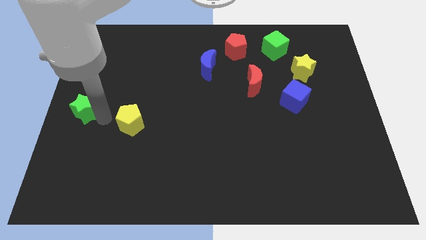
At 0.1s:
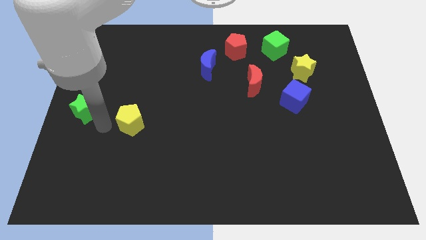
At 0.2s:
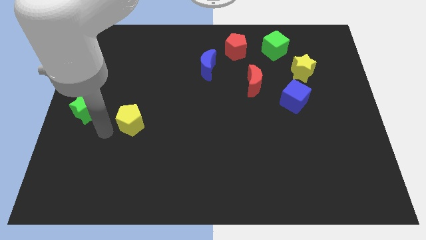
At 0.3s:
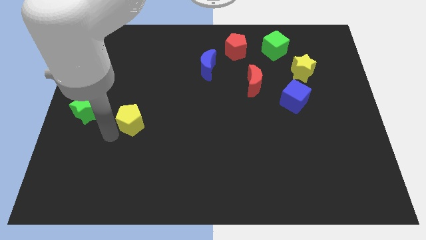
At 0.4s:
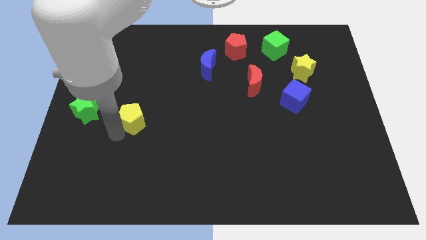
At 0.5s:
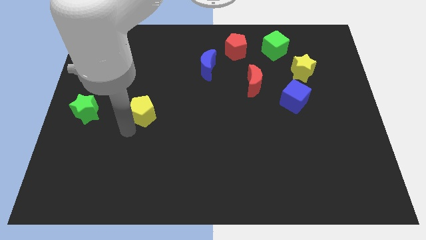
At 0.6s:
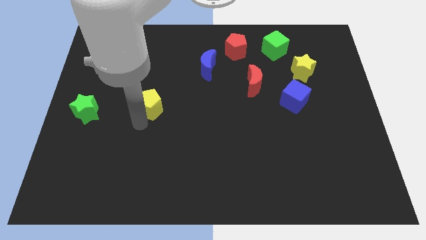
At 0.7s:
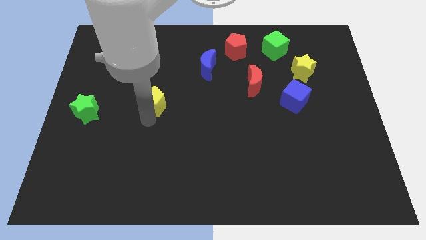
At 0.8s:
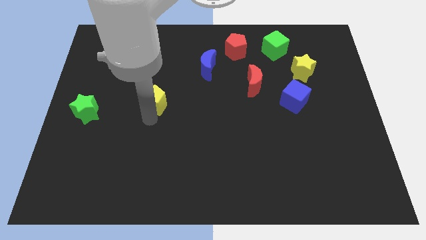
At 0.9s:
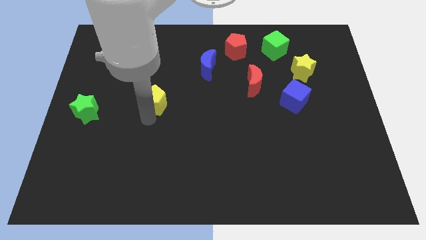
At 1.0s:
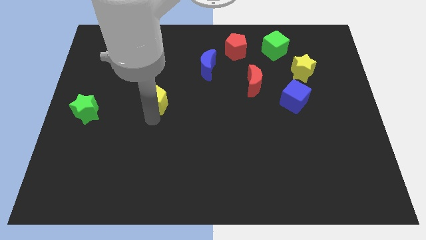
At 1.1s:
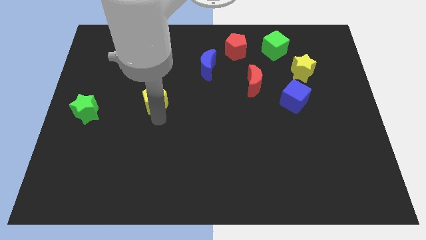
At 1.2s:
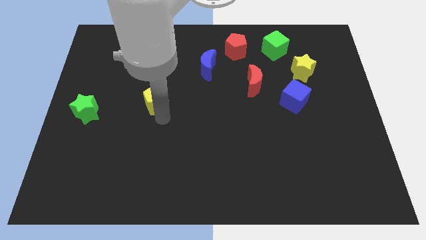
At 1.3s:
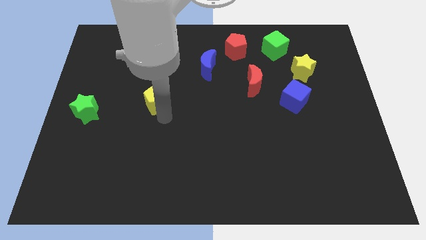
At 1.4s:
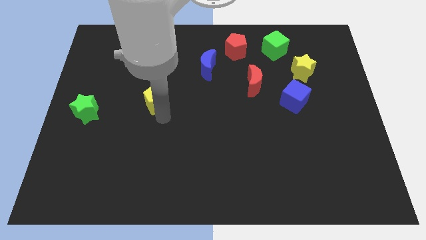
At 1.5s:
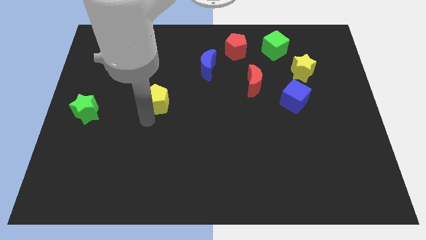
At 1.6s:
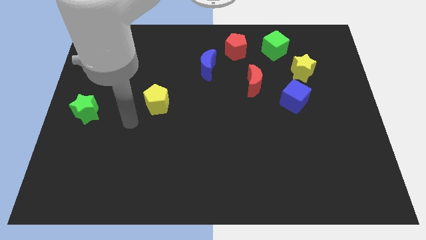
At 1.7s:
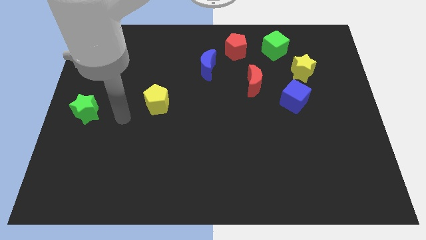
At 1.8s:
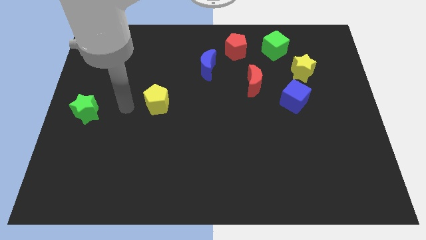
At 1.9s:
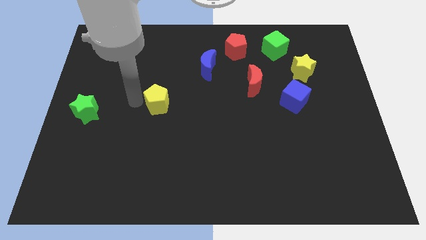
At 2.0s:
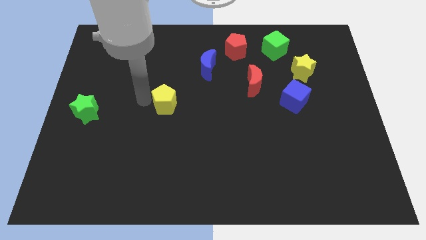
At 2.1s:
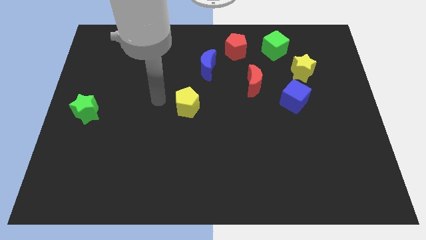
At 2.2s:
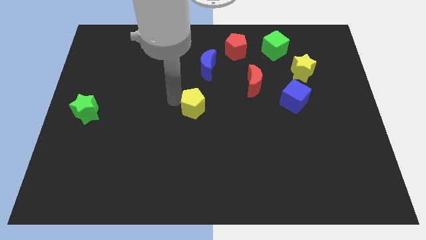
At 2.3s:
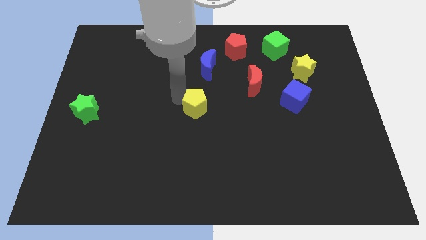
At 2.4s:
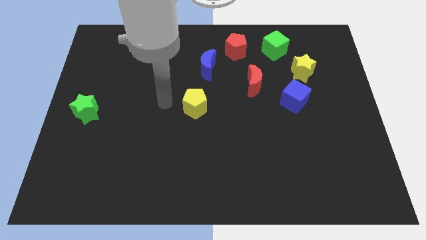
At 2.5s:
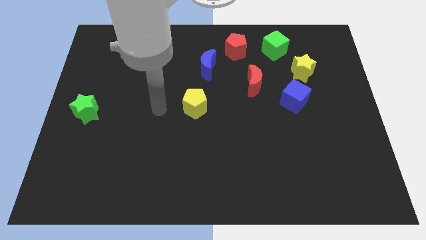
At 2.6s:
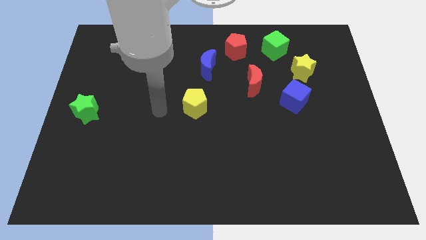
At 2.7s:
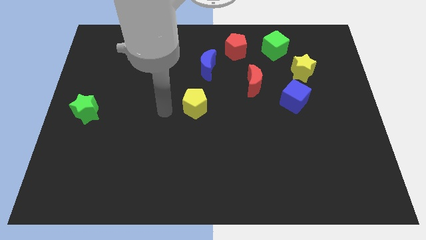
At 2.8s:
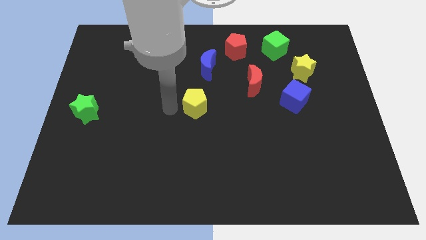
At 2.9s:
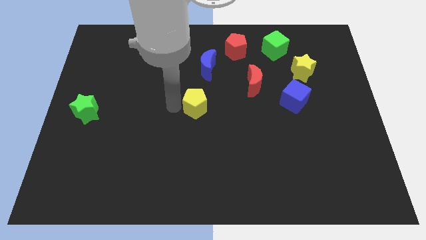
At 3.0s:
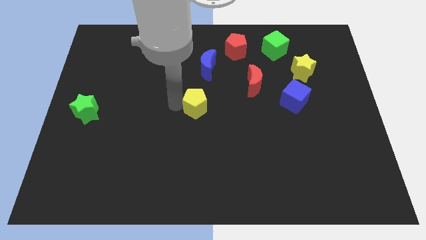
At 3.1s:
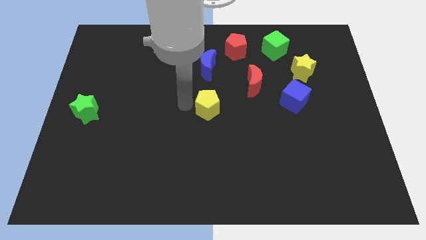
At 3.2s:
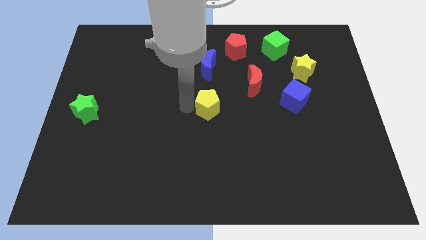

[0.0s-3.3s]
push the yellow pentagon to the bottom of the blue crescent

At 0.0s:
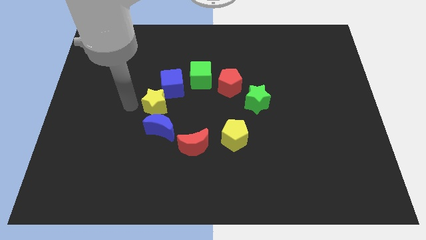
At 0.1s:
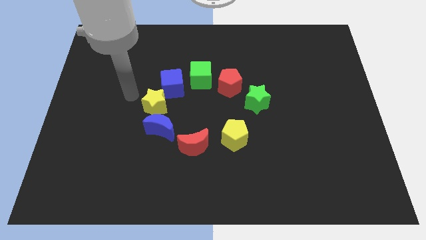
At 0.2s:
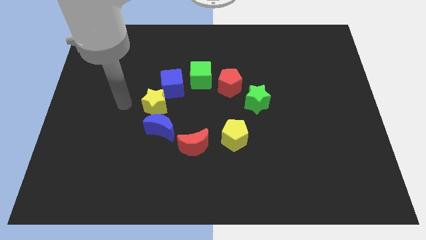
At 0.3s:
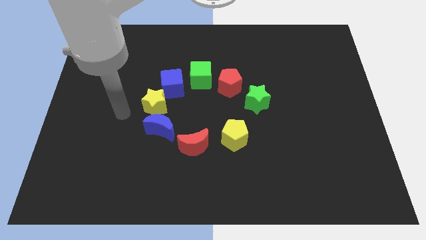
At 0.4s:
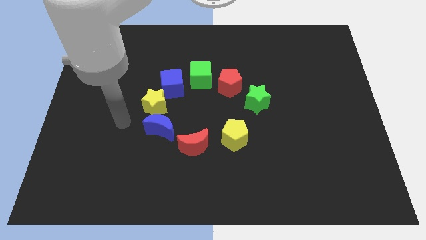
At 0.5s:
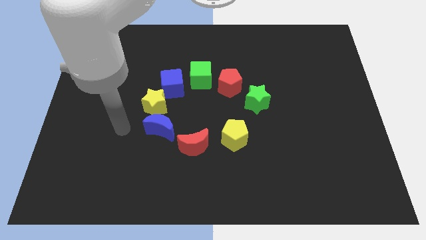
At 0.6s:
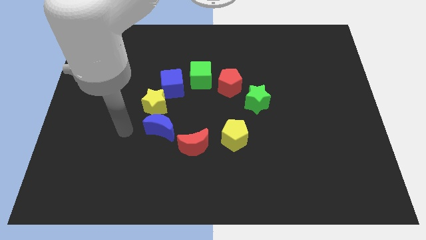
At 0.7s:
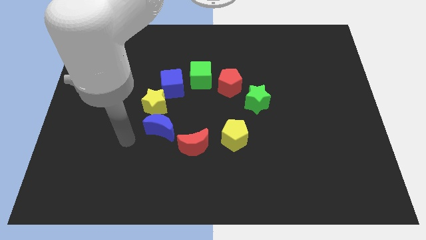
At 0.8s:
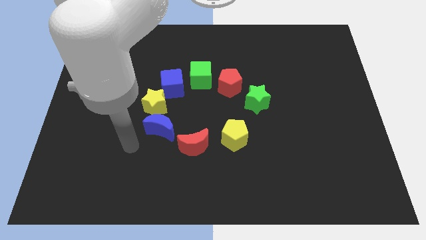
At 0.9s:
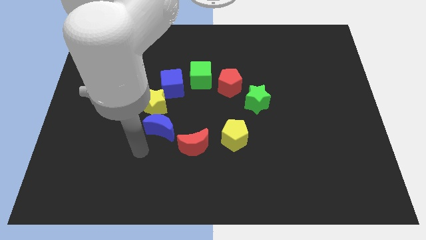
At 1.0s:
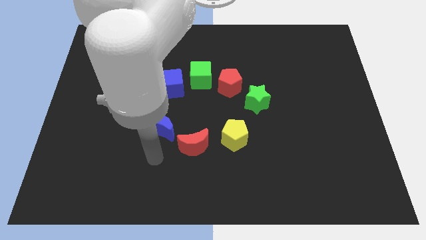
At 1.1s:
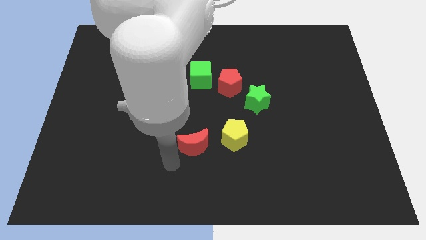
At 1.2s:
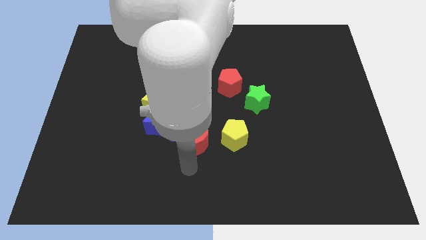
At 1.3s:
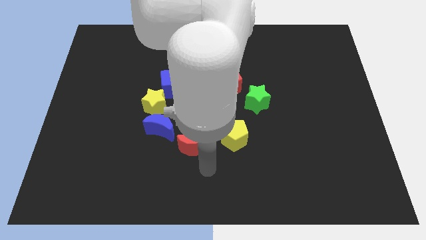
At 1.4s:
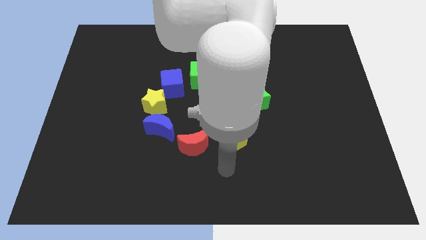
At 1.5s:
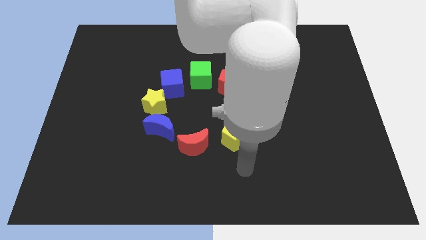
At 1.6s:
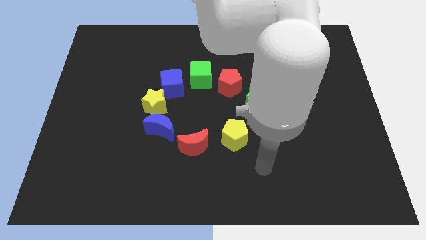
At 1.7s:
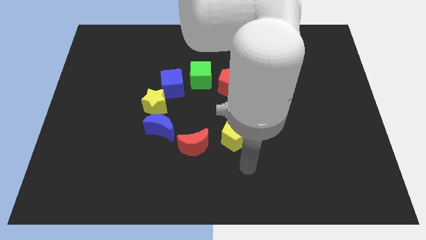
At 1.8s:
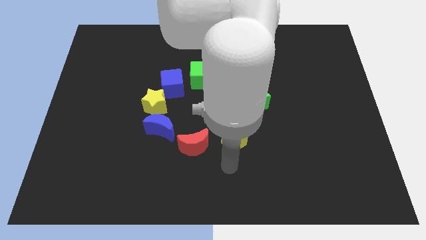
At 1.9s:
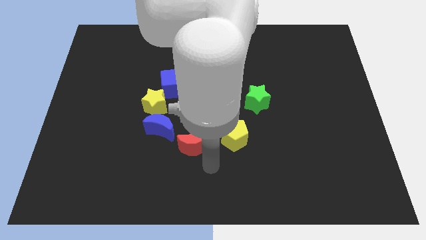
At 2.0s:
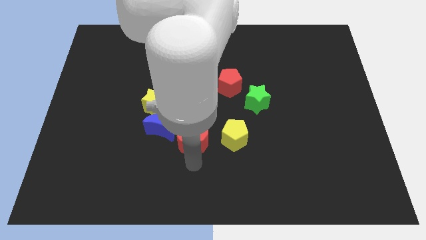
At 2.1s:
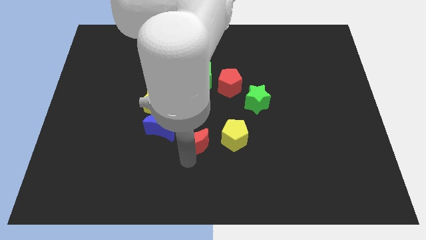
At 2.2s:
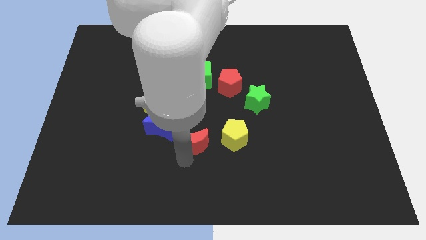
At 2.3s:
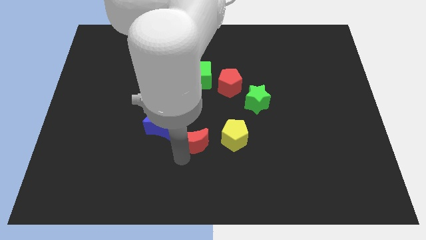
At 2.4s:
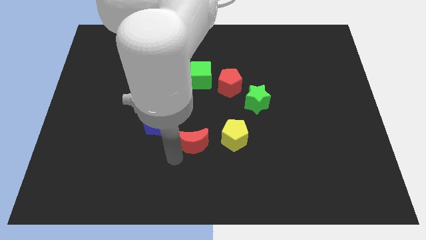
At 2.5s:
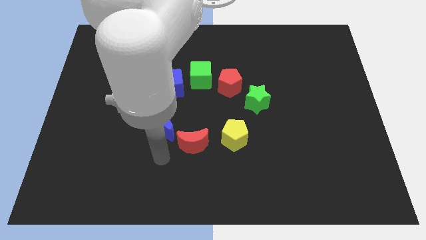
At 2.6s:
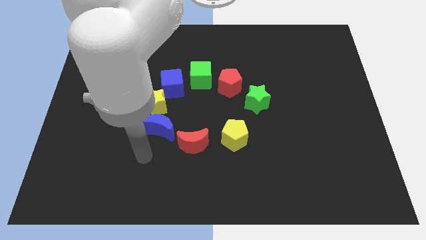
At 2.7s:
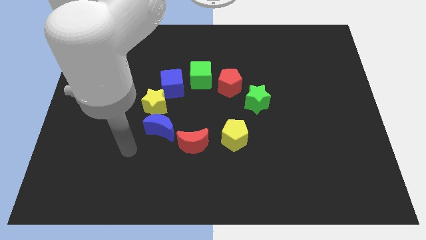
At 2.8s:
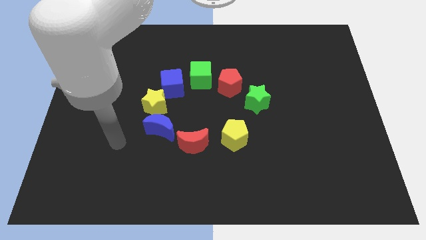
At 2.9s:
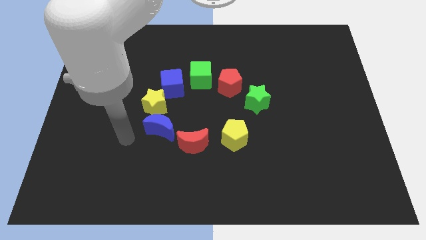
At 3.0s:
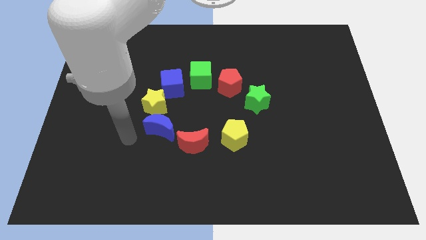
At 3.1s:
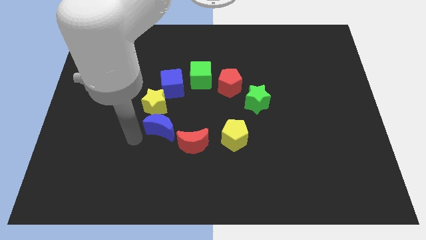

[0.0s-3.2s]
tap the red crescent

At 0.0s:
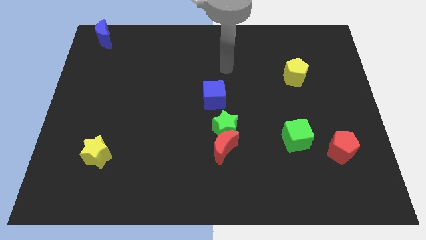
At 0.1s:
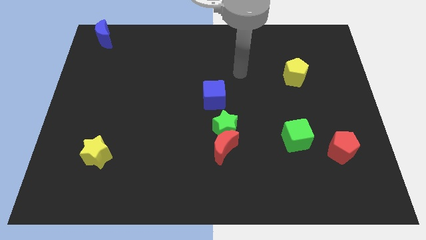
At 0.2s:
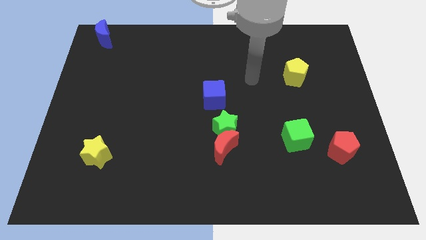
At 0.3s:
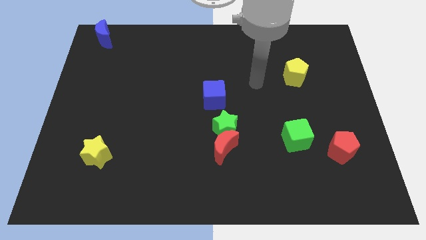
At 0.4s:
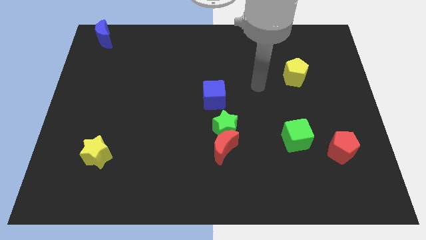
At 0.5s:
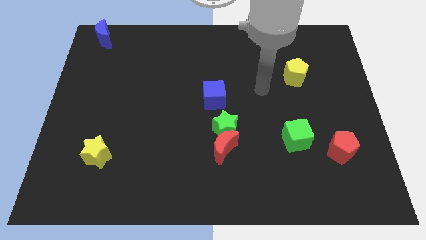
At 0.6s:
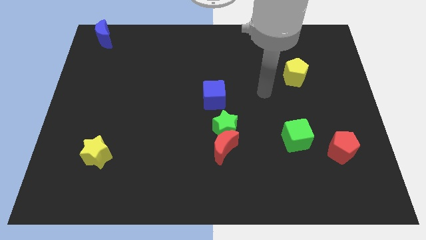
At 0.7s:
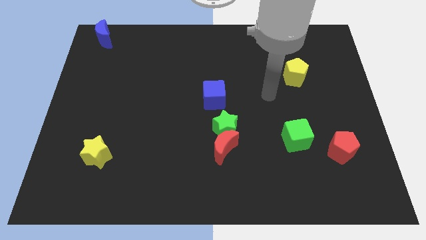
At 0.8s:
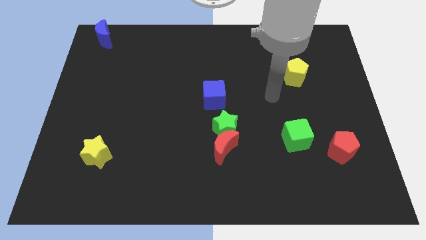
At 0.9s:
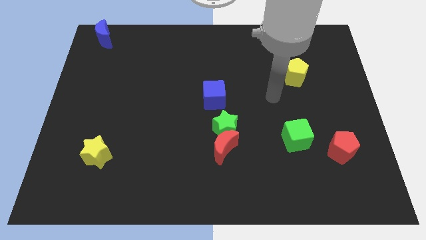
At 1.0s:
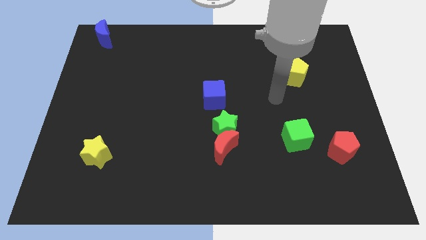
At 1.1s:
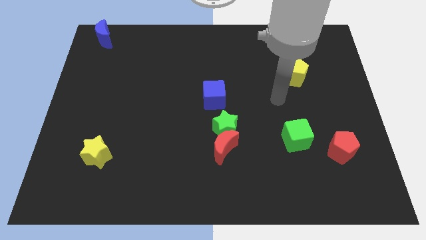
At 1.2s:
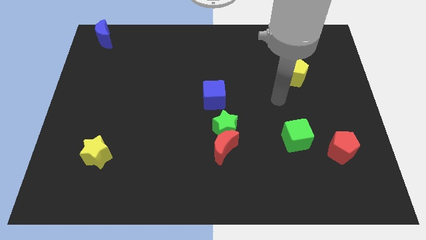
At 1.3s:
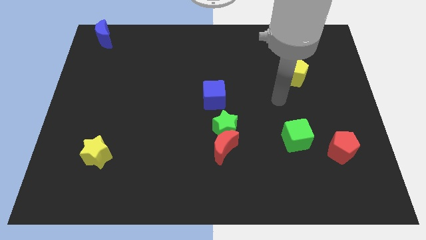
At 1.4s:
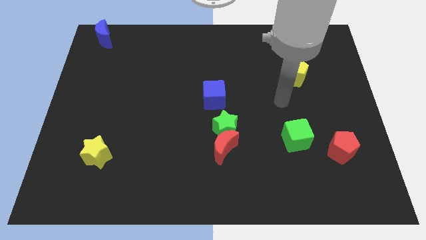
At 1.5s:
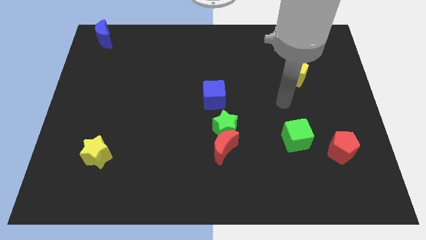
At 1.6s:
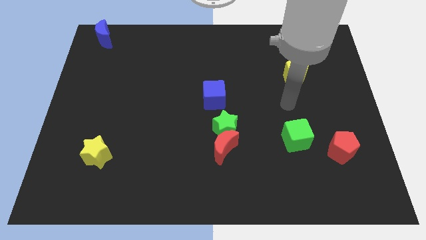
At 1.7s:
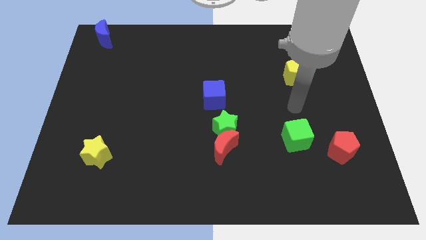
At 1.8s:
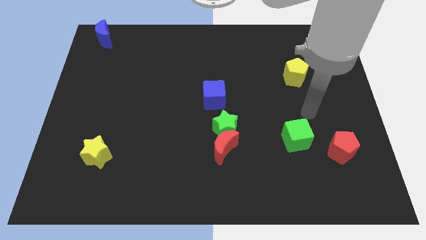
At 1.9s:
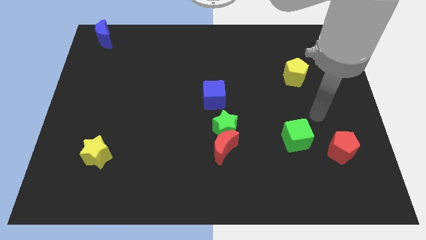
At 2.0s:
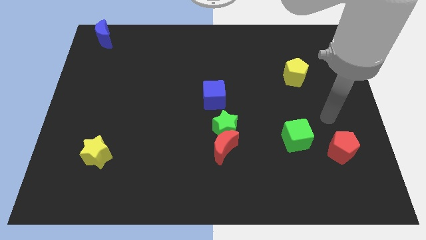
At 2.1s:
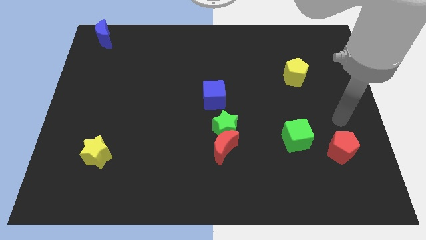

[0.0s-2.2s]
point your hand above the red pentagon

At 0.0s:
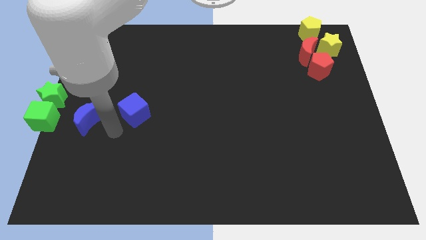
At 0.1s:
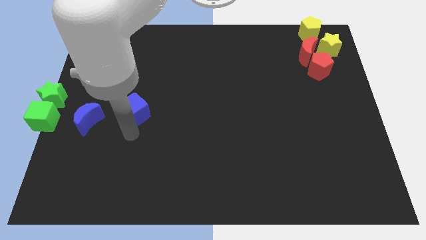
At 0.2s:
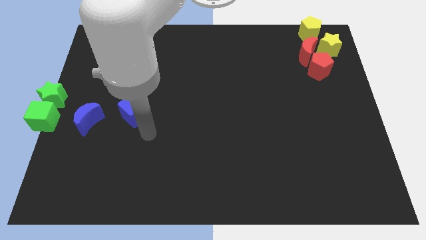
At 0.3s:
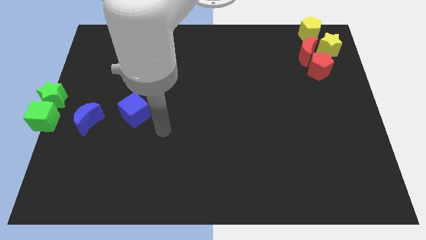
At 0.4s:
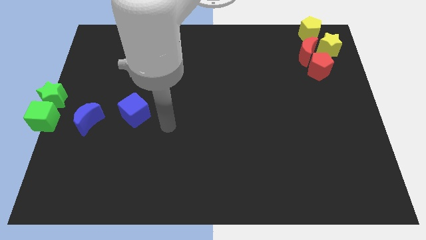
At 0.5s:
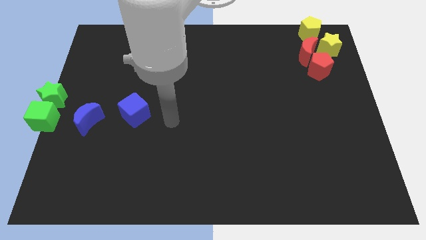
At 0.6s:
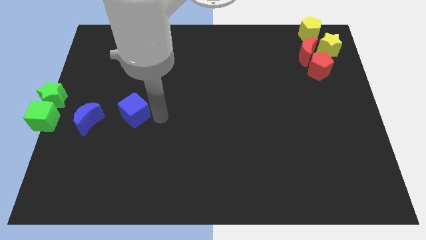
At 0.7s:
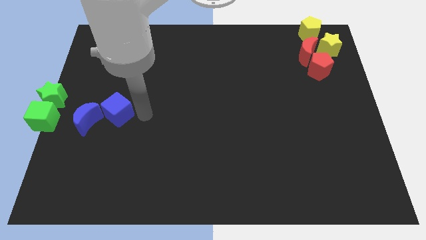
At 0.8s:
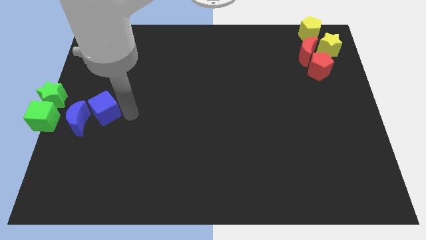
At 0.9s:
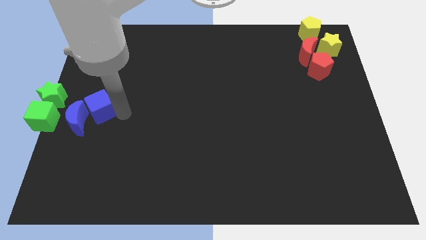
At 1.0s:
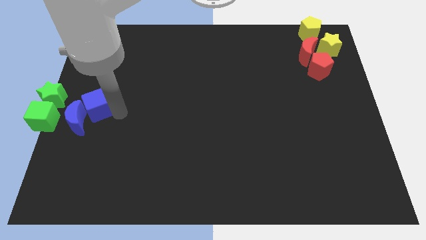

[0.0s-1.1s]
push blue blocks towards center left corner of the board
